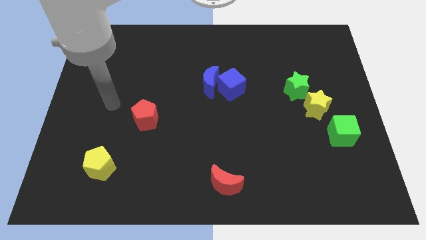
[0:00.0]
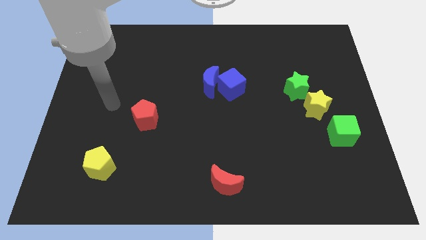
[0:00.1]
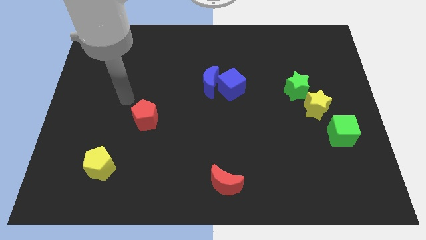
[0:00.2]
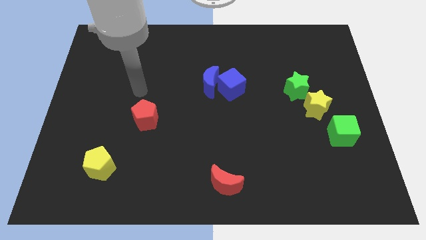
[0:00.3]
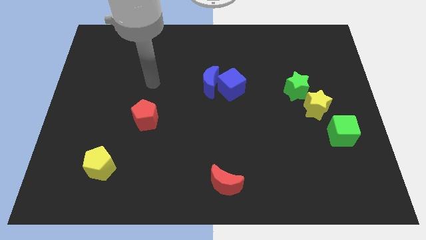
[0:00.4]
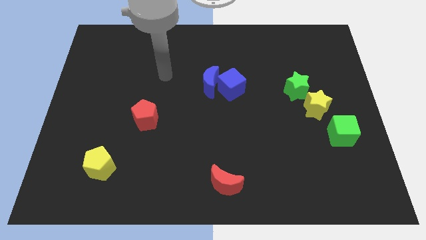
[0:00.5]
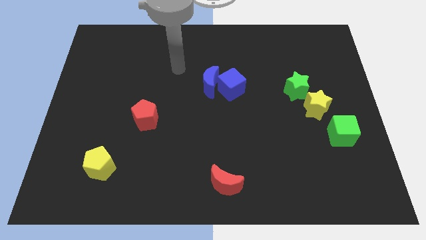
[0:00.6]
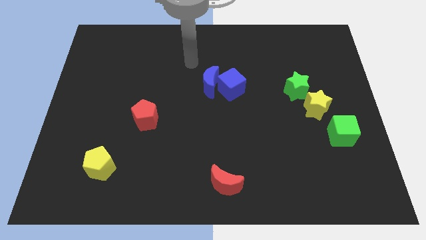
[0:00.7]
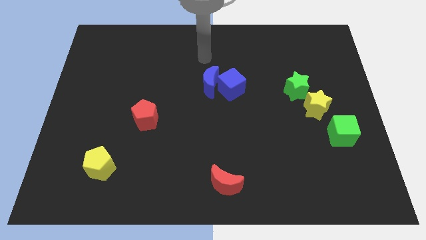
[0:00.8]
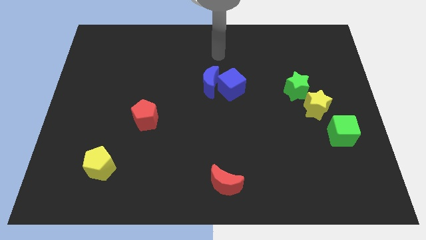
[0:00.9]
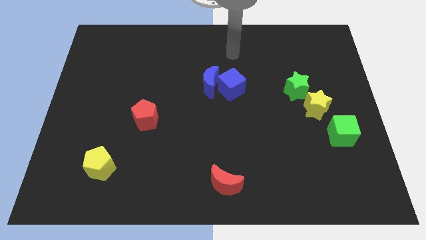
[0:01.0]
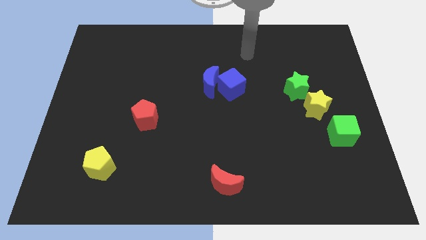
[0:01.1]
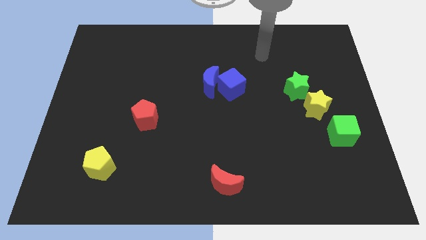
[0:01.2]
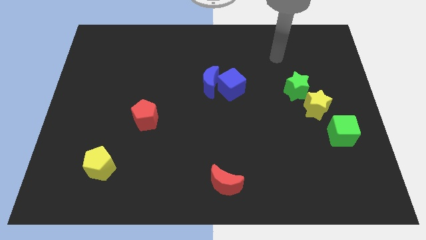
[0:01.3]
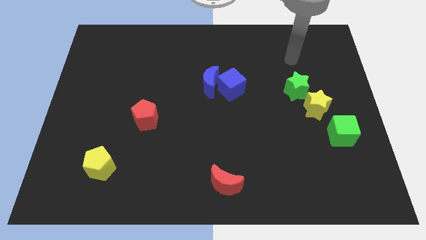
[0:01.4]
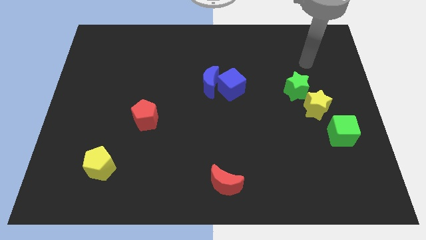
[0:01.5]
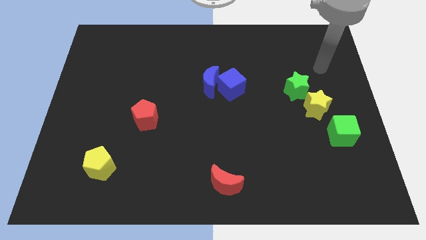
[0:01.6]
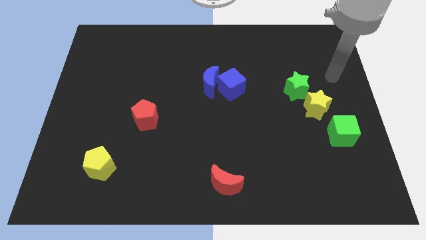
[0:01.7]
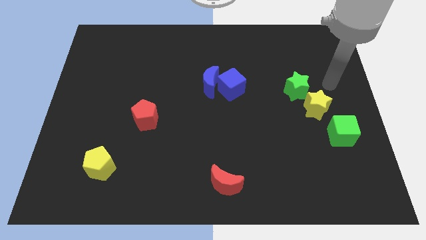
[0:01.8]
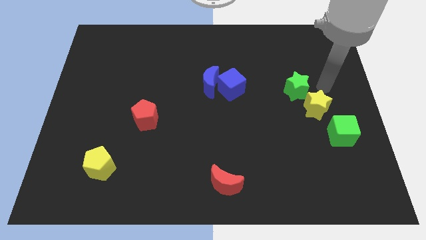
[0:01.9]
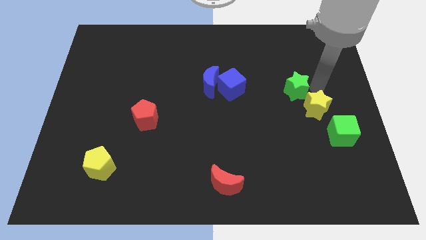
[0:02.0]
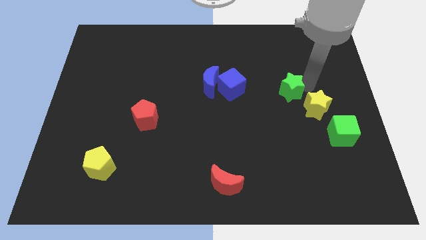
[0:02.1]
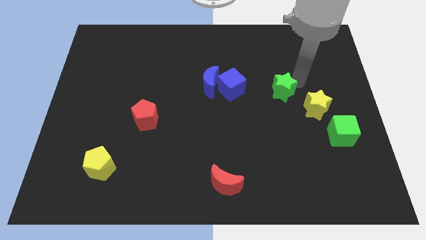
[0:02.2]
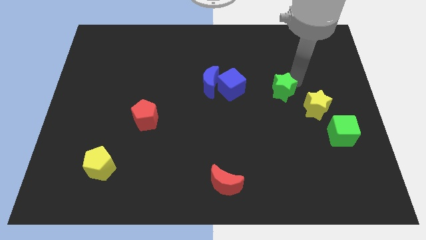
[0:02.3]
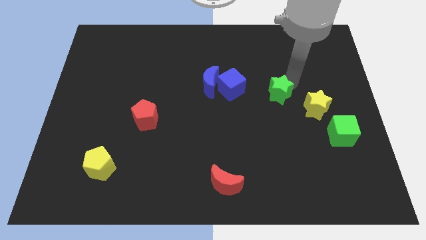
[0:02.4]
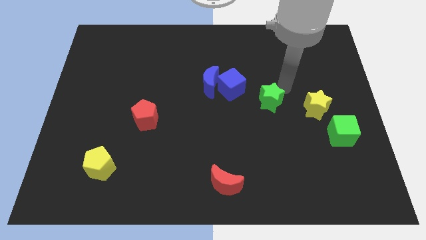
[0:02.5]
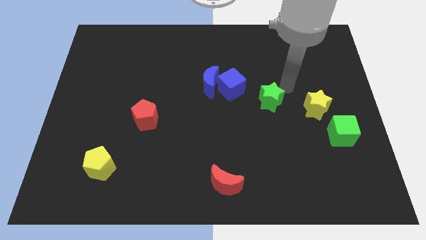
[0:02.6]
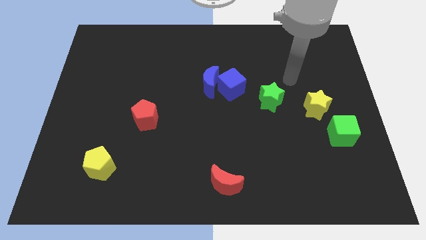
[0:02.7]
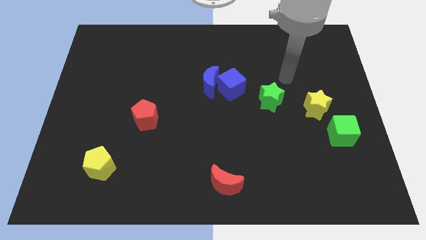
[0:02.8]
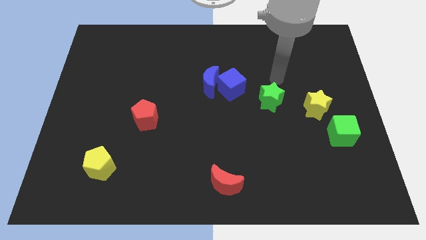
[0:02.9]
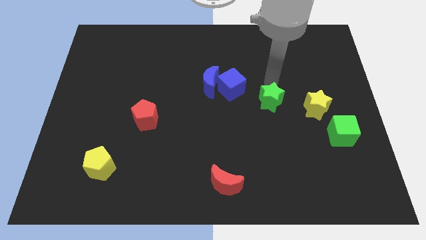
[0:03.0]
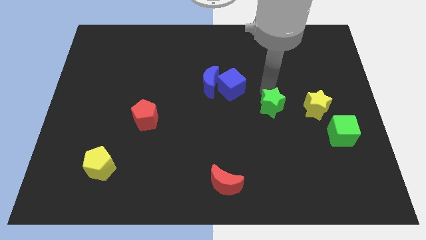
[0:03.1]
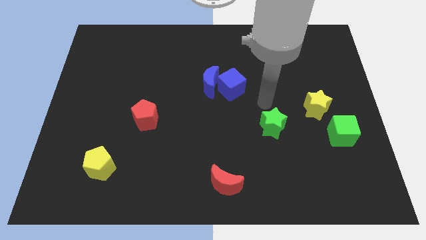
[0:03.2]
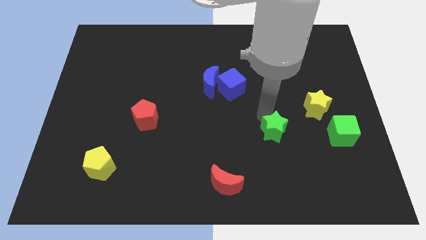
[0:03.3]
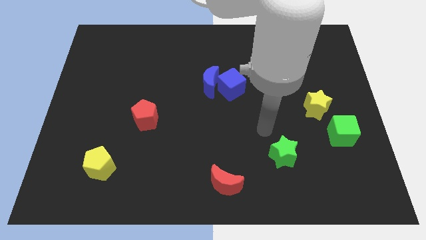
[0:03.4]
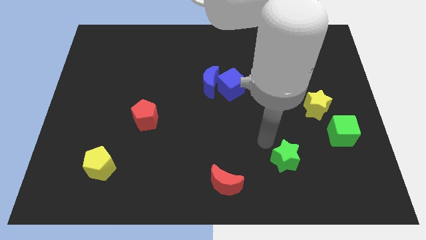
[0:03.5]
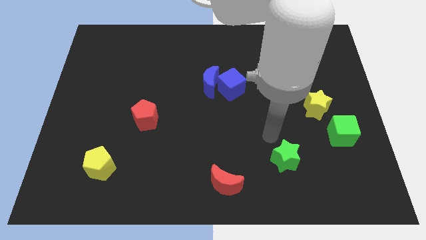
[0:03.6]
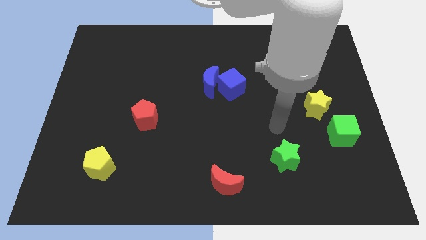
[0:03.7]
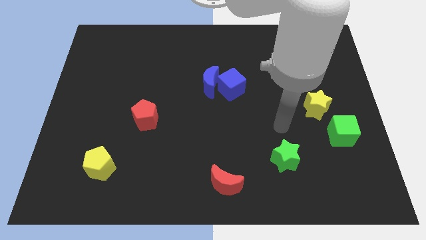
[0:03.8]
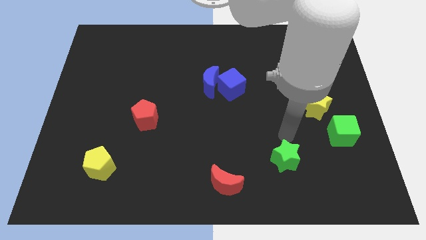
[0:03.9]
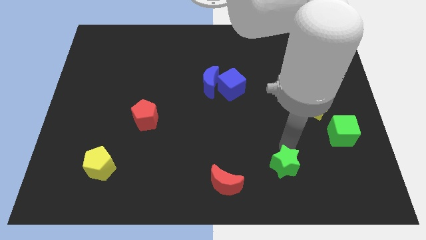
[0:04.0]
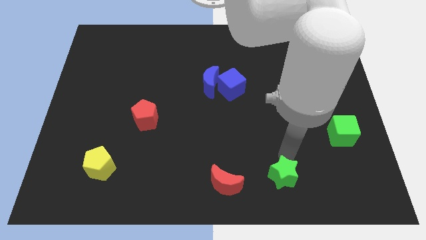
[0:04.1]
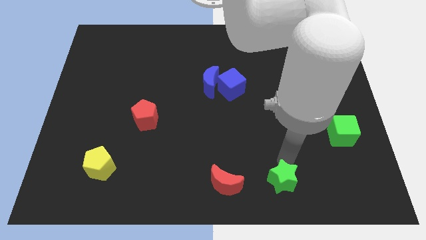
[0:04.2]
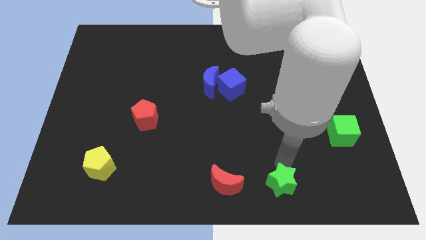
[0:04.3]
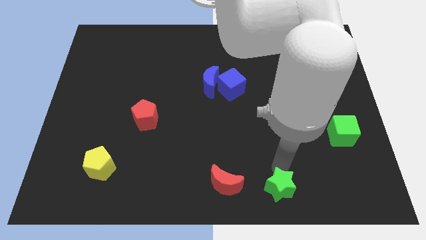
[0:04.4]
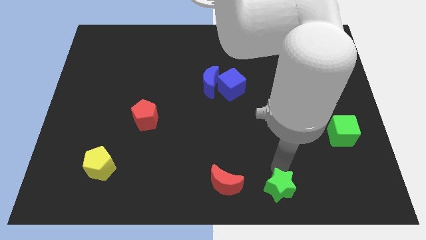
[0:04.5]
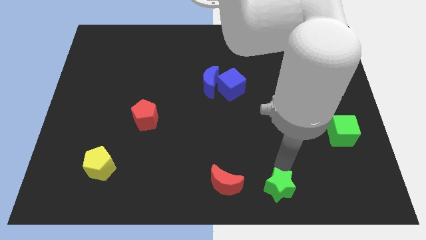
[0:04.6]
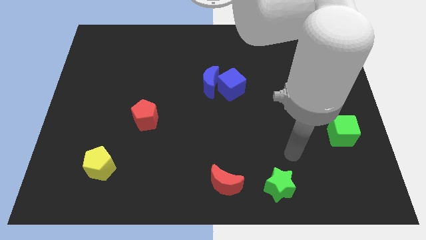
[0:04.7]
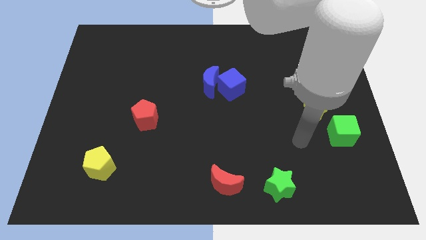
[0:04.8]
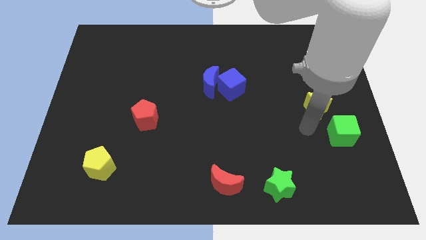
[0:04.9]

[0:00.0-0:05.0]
push the green star diagonal to the right of the red crescent

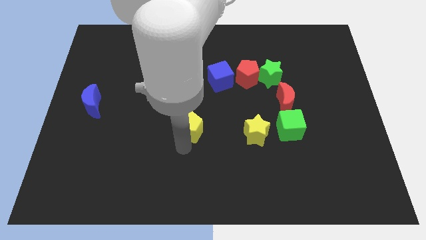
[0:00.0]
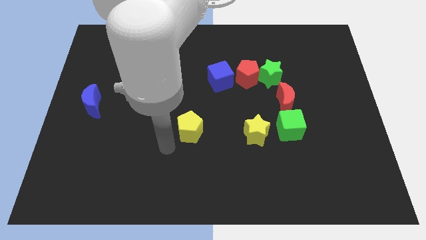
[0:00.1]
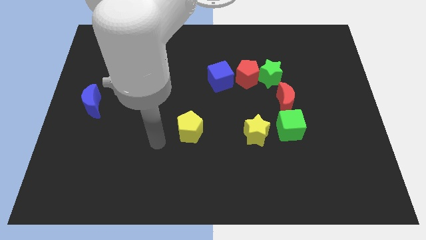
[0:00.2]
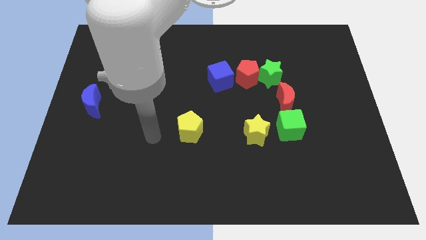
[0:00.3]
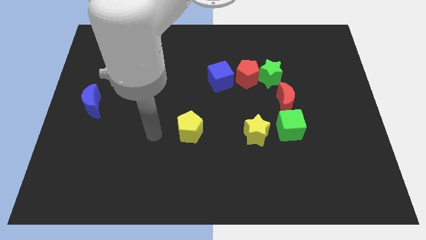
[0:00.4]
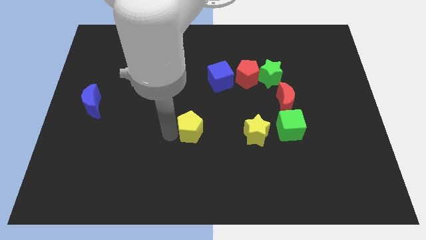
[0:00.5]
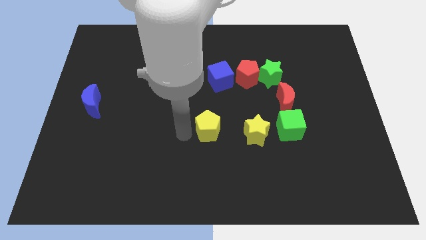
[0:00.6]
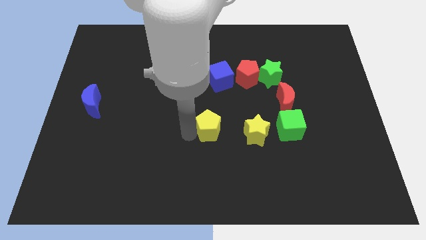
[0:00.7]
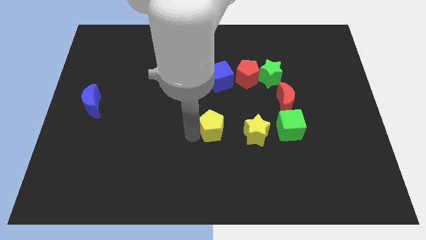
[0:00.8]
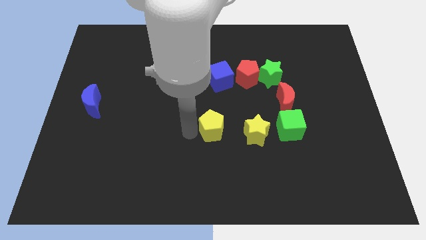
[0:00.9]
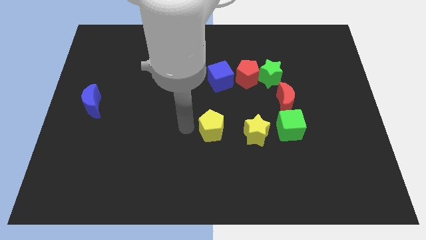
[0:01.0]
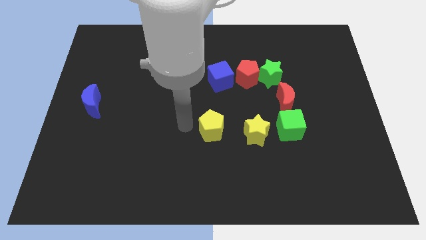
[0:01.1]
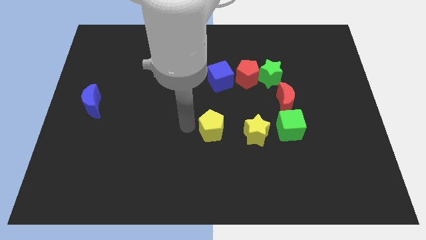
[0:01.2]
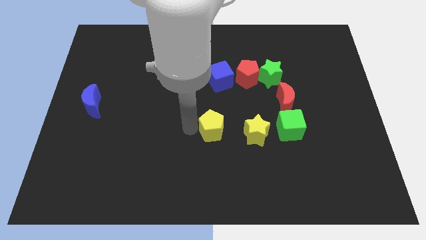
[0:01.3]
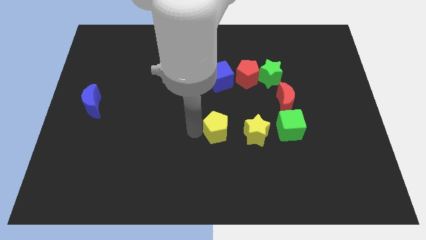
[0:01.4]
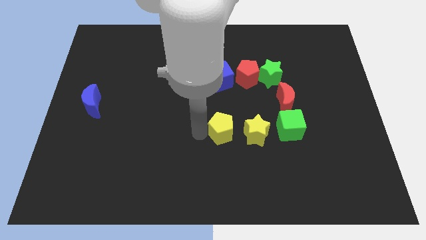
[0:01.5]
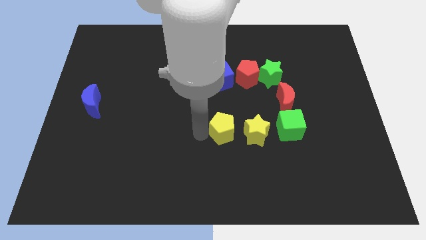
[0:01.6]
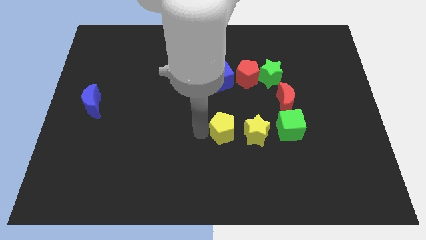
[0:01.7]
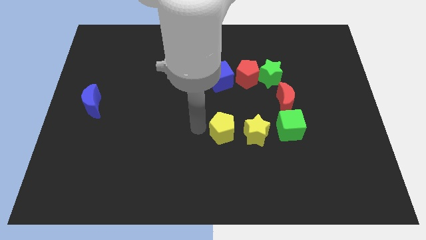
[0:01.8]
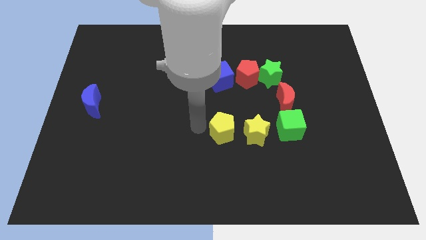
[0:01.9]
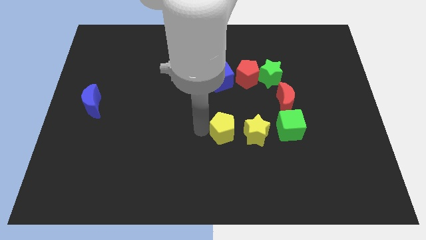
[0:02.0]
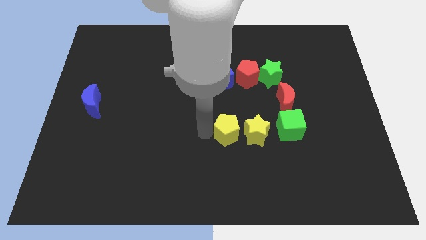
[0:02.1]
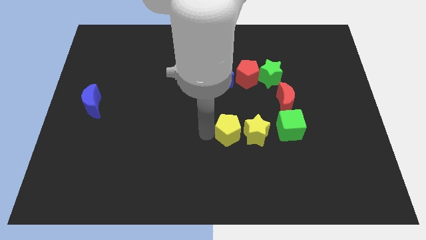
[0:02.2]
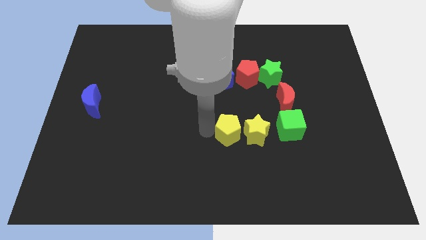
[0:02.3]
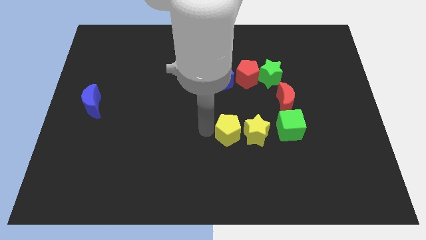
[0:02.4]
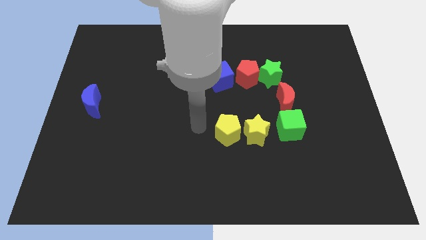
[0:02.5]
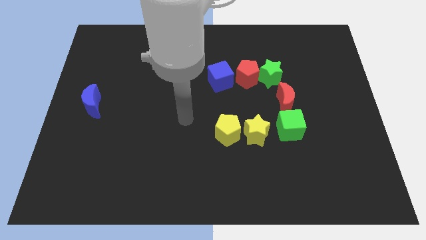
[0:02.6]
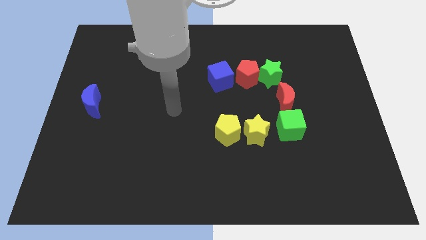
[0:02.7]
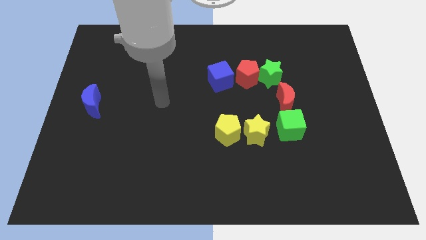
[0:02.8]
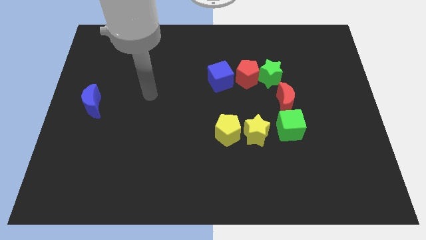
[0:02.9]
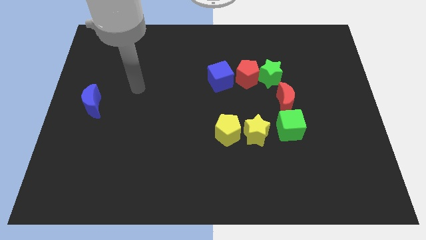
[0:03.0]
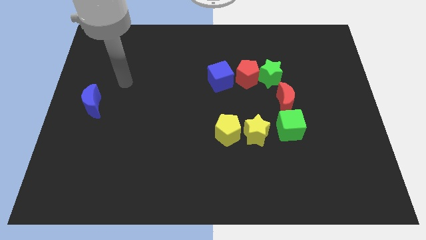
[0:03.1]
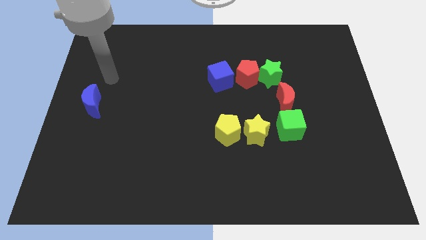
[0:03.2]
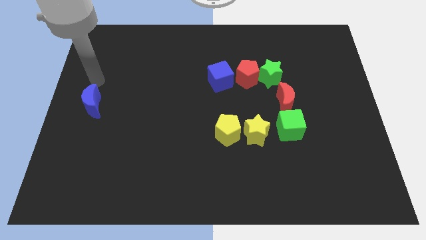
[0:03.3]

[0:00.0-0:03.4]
push the yellow pentagon to the left side of the yellow star

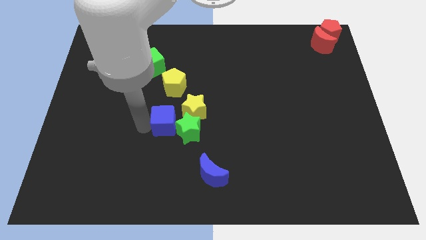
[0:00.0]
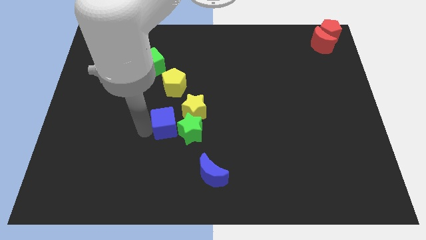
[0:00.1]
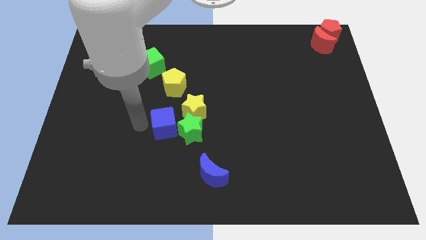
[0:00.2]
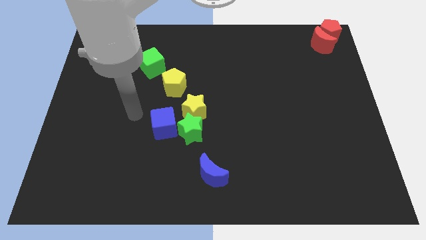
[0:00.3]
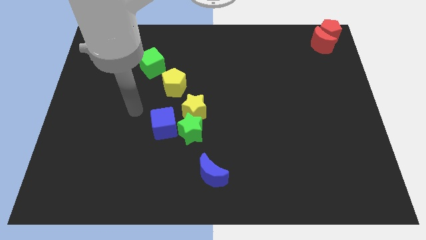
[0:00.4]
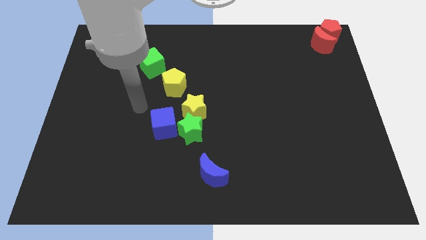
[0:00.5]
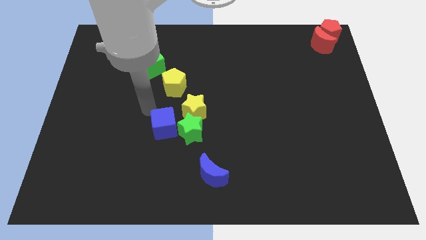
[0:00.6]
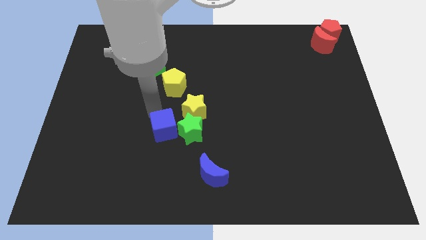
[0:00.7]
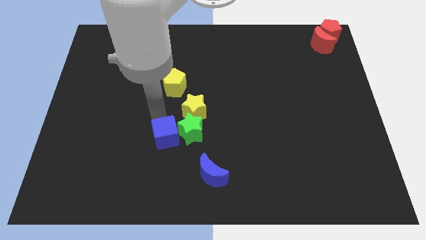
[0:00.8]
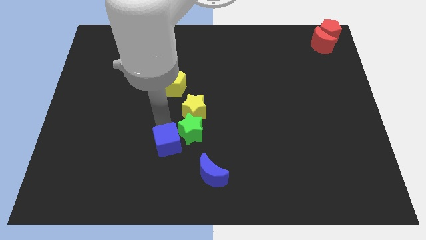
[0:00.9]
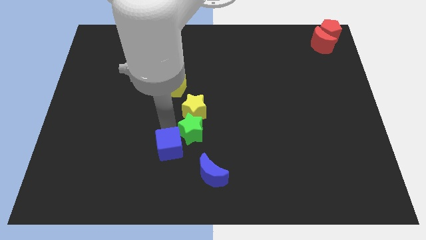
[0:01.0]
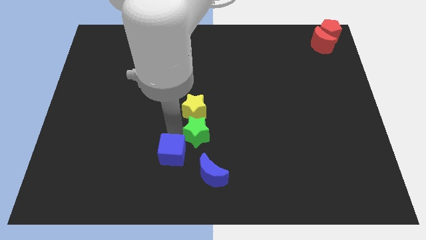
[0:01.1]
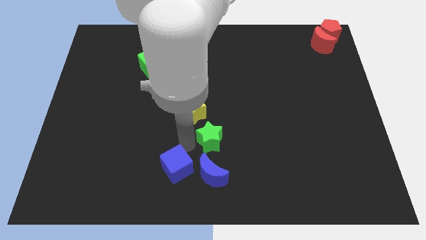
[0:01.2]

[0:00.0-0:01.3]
arrange the blue cube at the left side of the blue crescent
